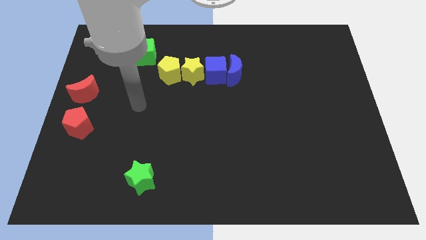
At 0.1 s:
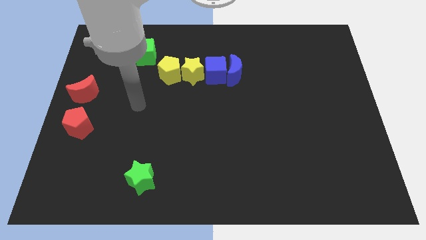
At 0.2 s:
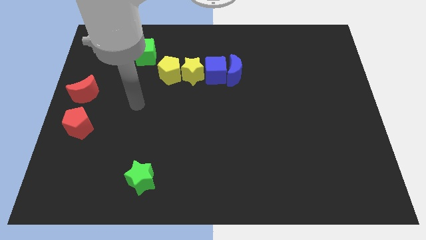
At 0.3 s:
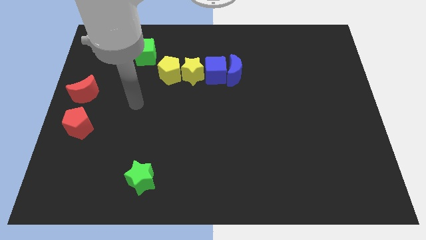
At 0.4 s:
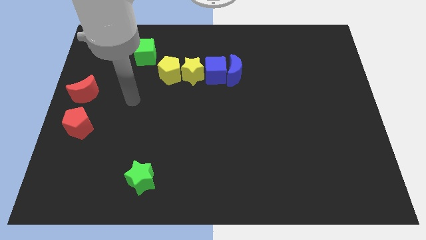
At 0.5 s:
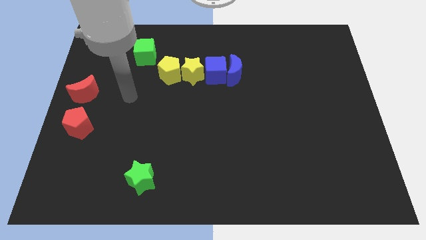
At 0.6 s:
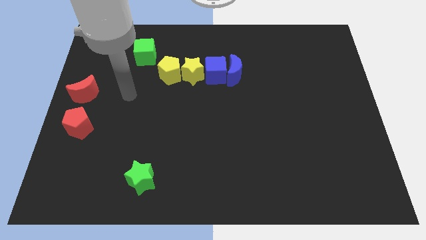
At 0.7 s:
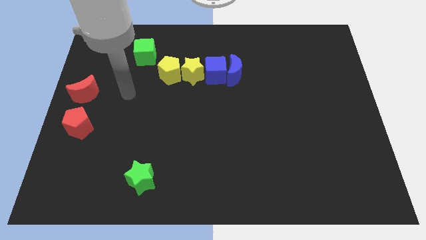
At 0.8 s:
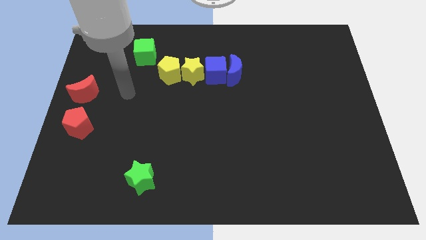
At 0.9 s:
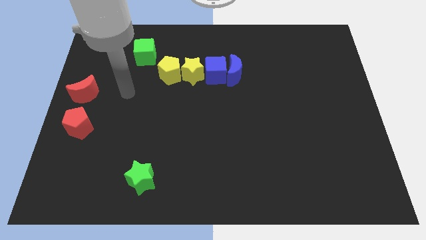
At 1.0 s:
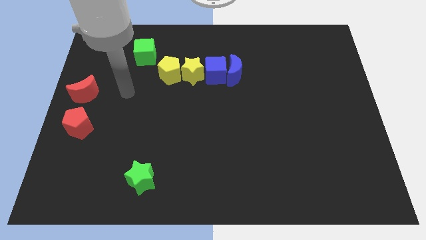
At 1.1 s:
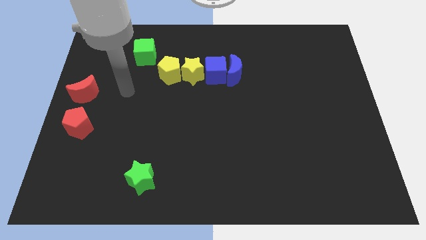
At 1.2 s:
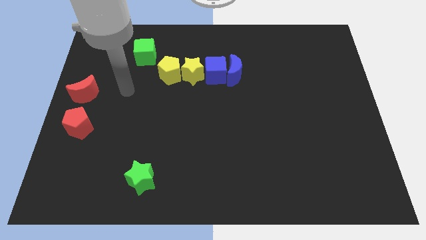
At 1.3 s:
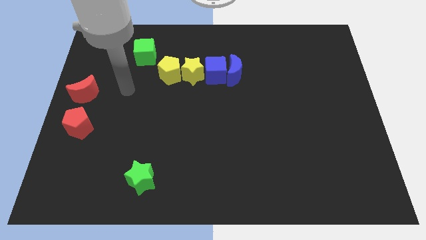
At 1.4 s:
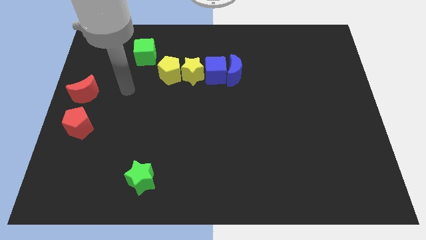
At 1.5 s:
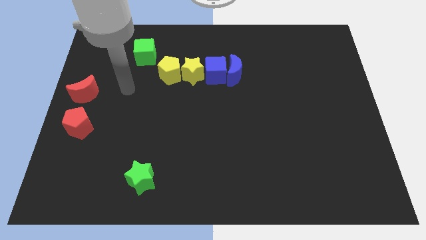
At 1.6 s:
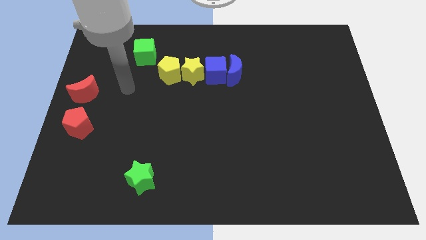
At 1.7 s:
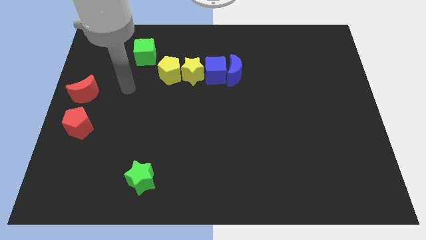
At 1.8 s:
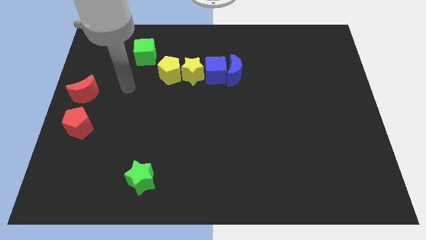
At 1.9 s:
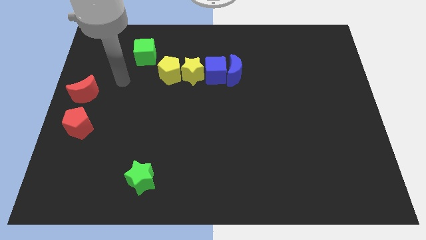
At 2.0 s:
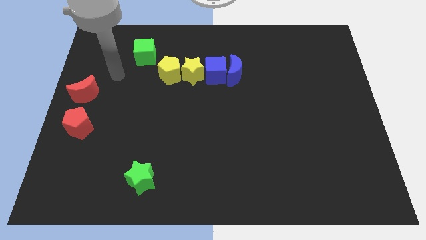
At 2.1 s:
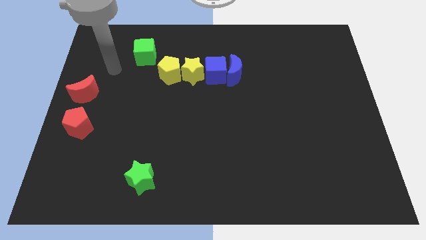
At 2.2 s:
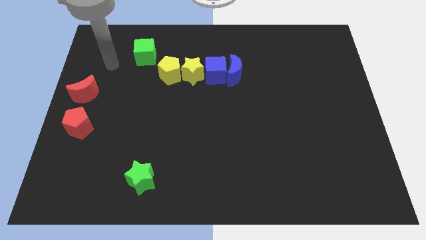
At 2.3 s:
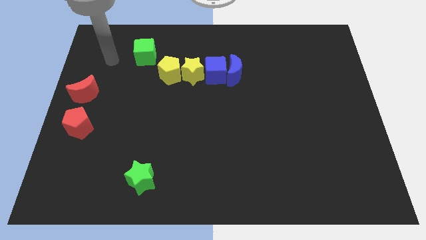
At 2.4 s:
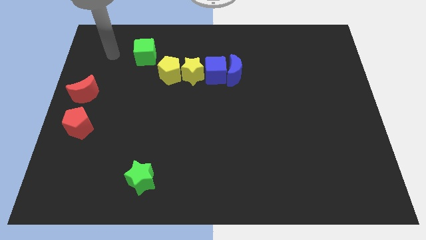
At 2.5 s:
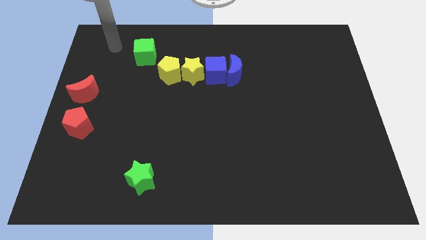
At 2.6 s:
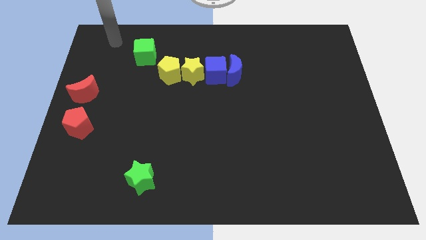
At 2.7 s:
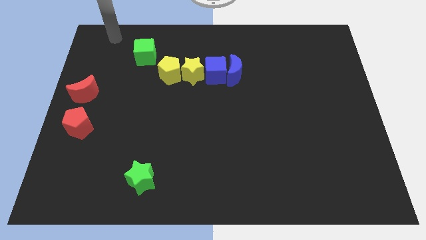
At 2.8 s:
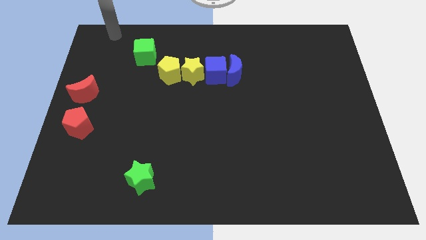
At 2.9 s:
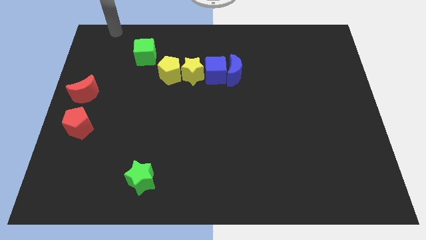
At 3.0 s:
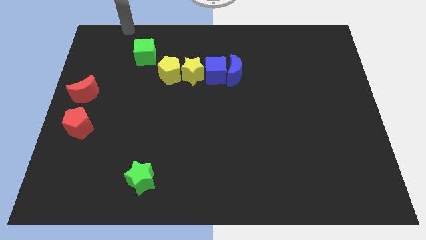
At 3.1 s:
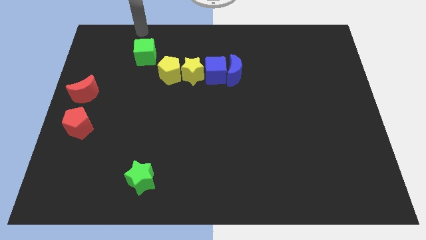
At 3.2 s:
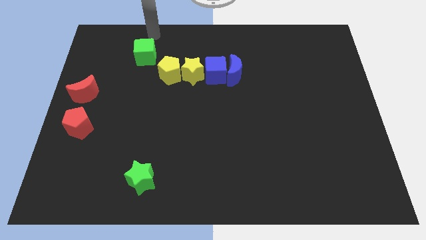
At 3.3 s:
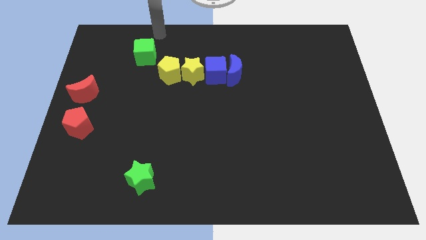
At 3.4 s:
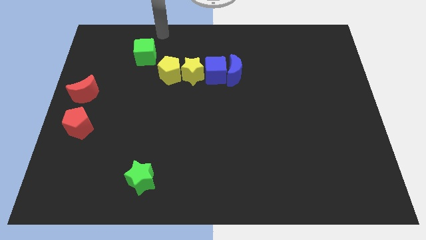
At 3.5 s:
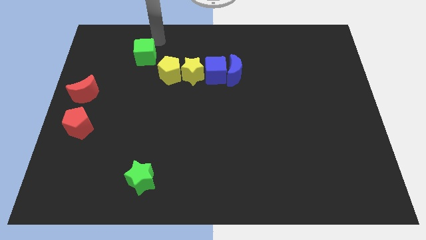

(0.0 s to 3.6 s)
move your arm towards the green cube

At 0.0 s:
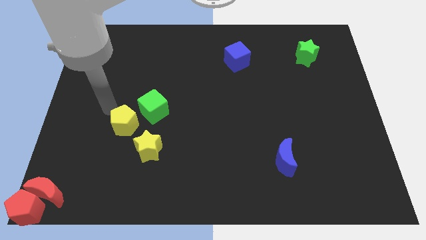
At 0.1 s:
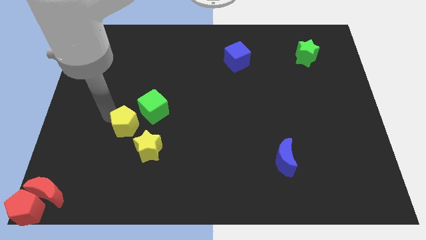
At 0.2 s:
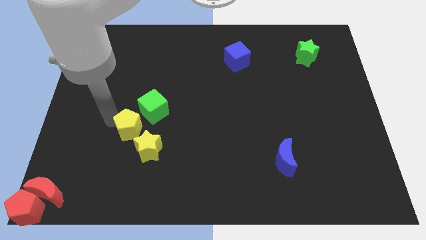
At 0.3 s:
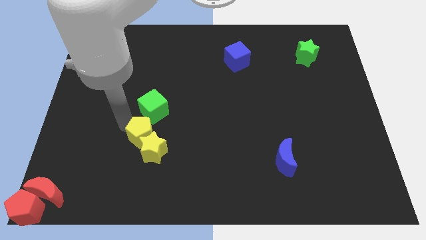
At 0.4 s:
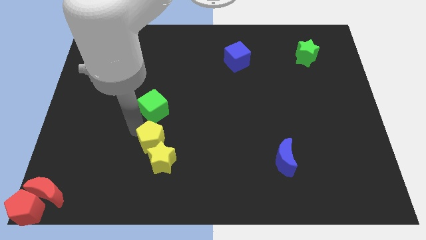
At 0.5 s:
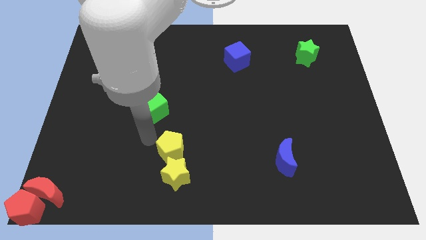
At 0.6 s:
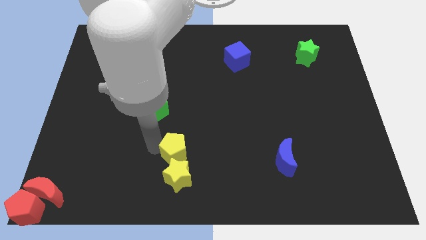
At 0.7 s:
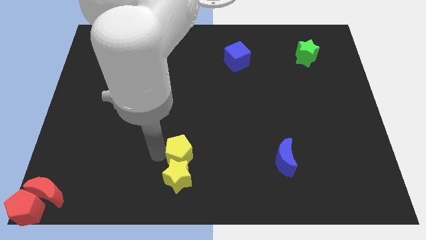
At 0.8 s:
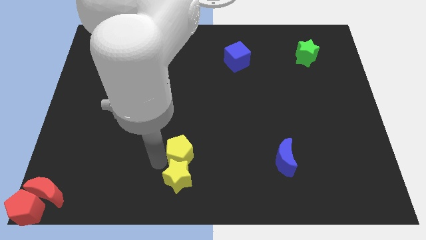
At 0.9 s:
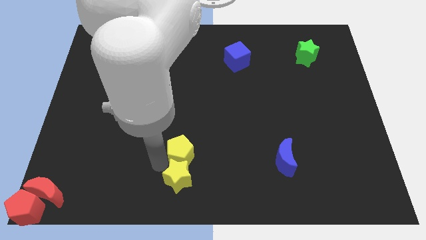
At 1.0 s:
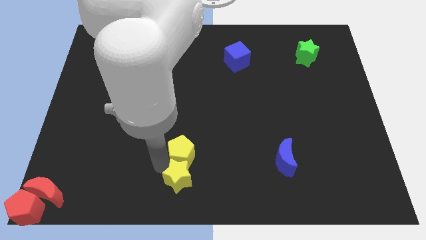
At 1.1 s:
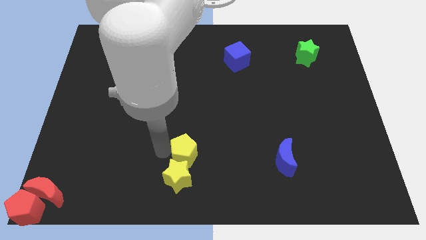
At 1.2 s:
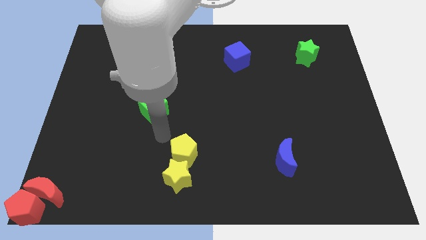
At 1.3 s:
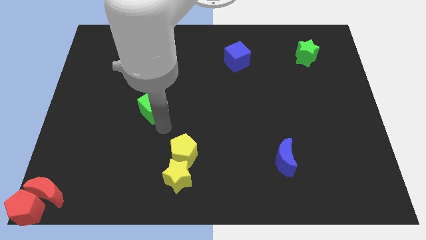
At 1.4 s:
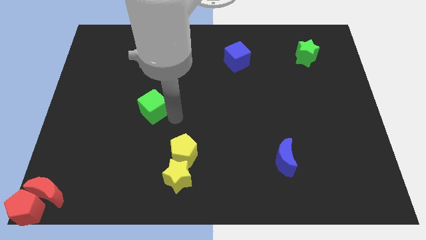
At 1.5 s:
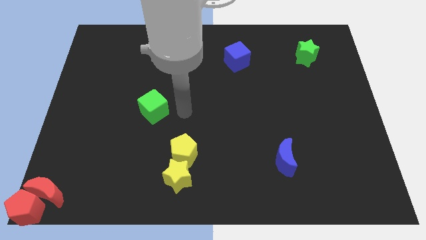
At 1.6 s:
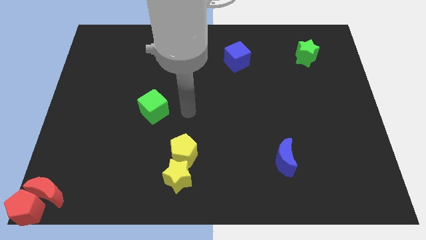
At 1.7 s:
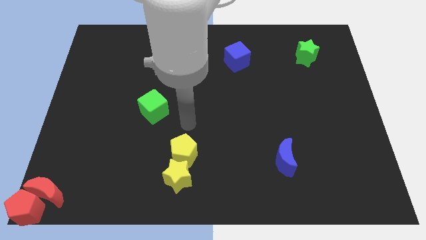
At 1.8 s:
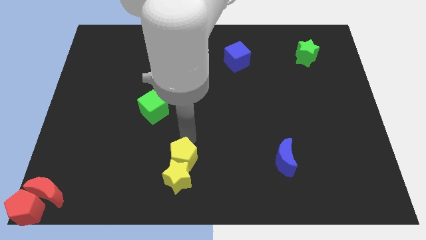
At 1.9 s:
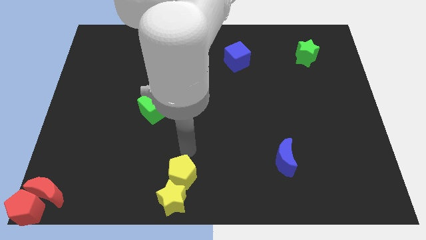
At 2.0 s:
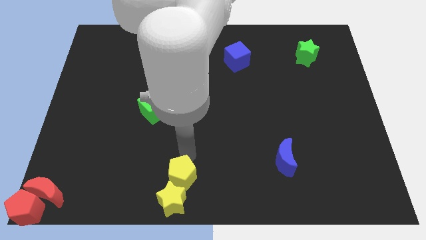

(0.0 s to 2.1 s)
push the yellow blocks towards the bottom side of the board

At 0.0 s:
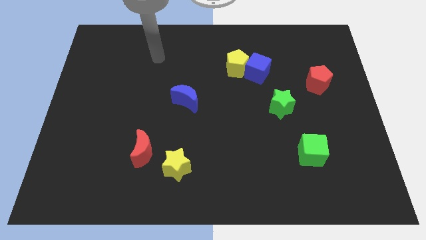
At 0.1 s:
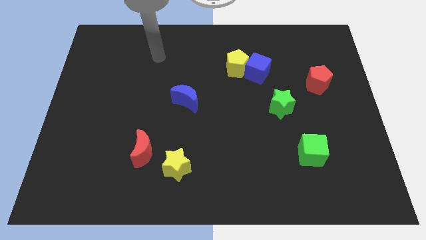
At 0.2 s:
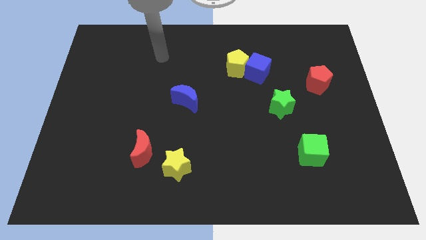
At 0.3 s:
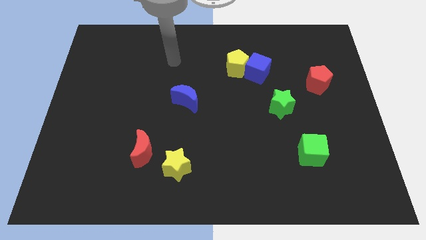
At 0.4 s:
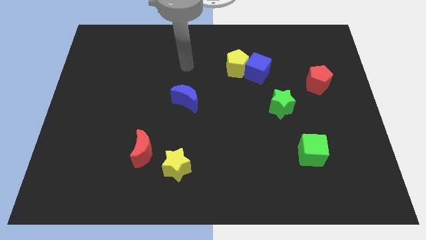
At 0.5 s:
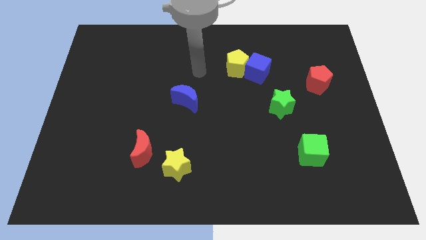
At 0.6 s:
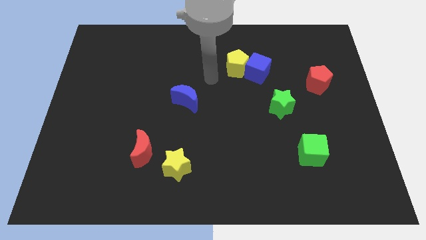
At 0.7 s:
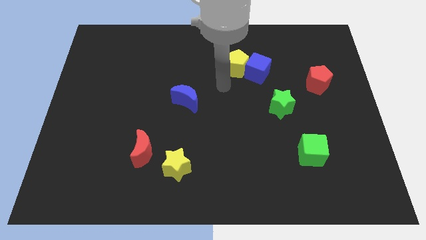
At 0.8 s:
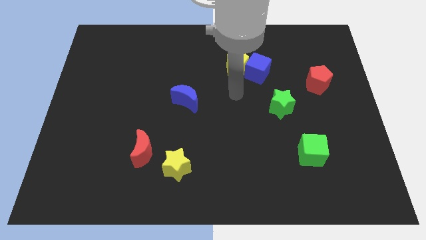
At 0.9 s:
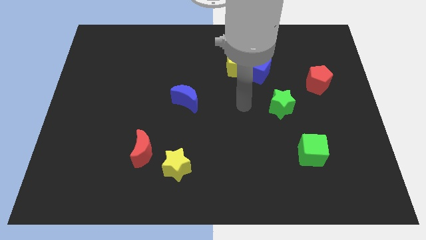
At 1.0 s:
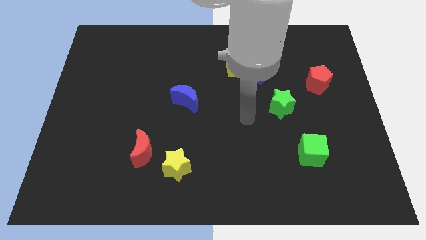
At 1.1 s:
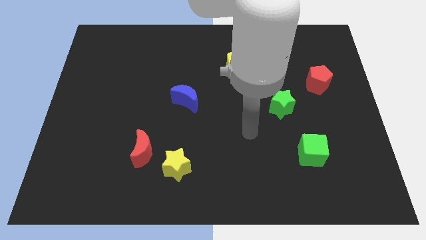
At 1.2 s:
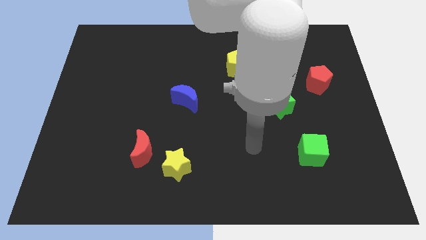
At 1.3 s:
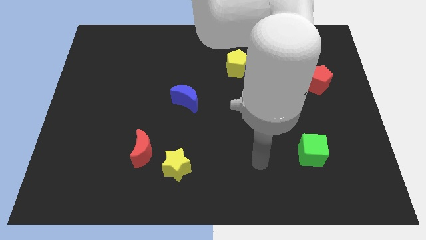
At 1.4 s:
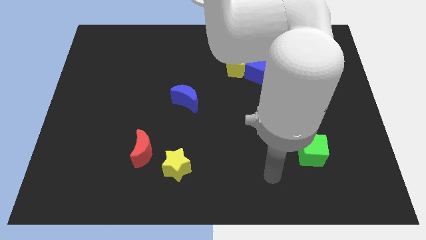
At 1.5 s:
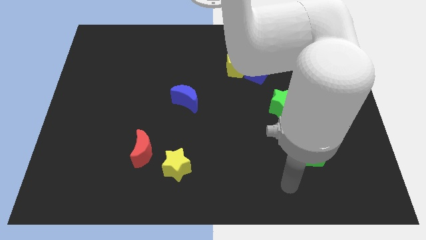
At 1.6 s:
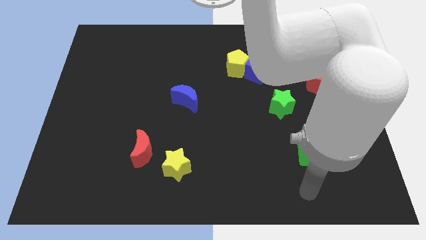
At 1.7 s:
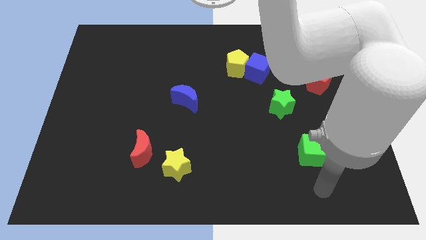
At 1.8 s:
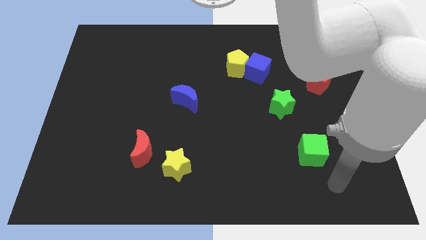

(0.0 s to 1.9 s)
move the arm to the right of the green cube

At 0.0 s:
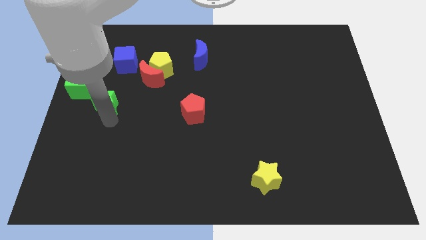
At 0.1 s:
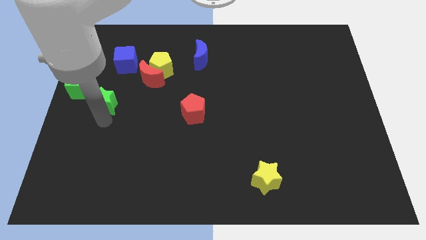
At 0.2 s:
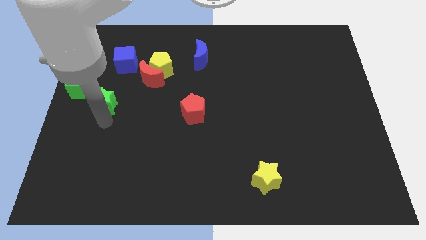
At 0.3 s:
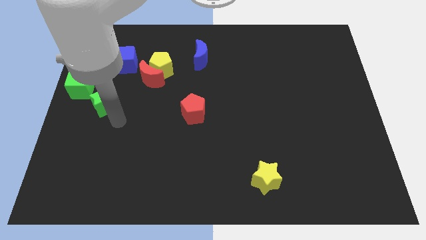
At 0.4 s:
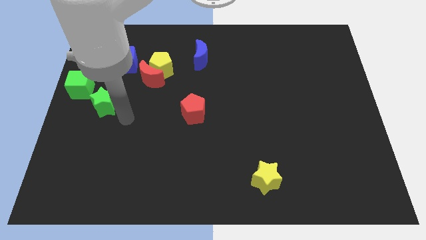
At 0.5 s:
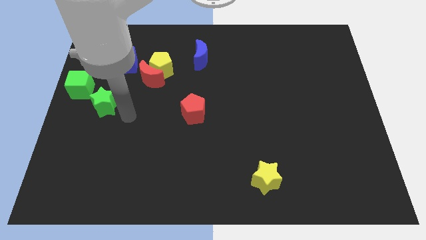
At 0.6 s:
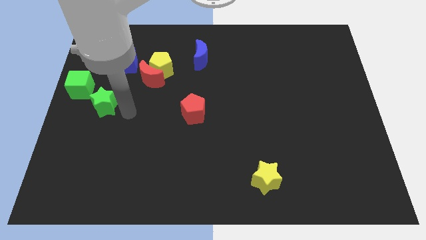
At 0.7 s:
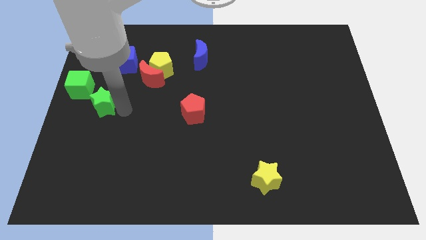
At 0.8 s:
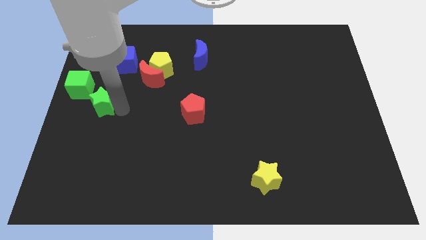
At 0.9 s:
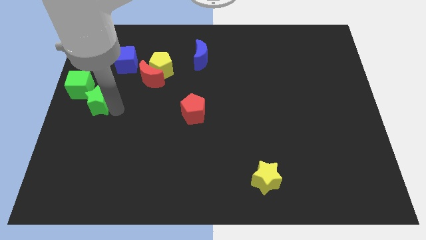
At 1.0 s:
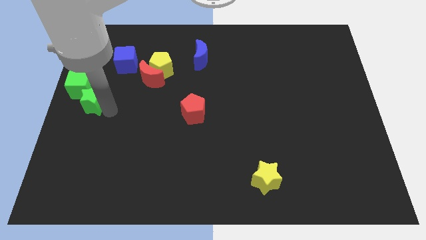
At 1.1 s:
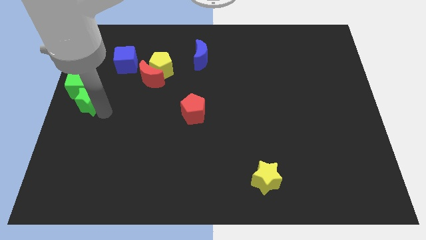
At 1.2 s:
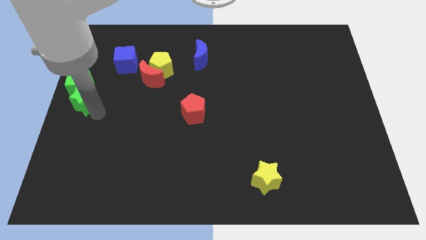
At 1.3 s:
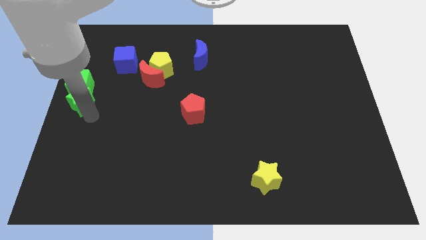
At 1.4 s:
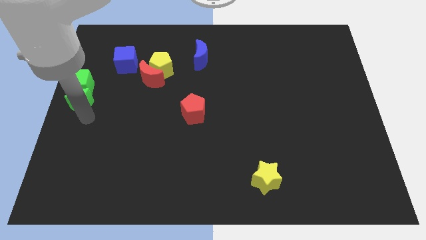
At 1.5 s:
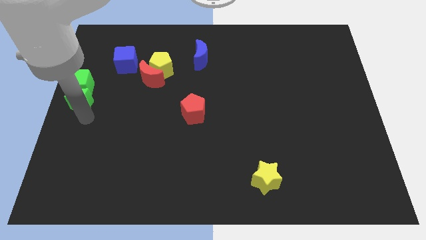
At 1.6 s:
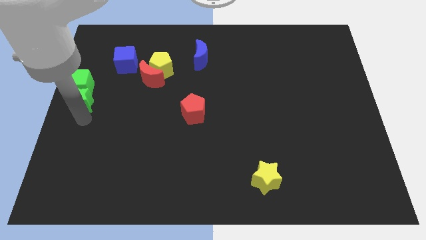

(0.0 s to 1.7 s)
place the green star below the green cube
